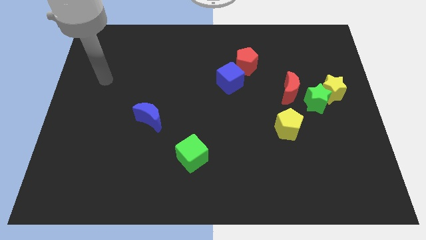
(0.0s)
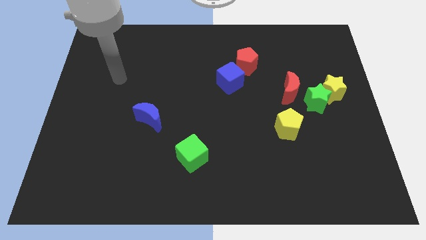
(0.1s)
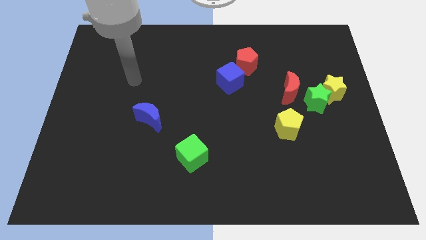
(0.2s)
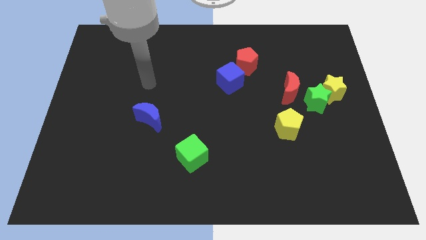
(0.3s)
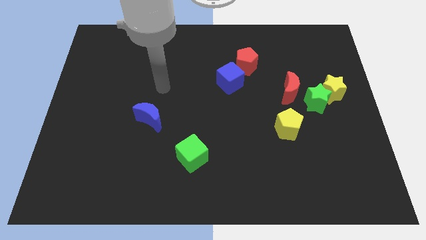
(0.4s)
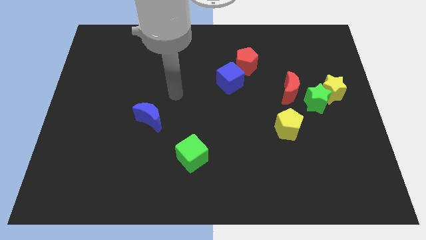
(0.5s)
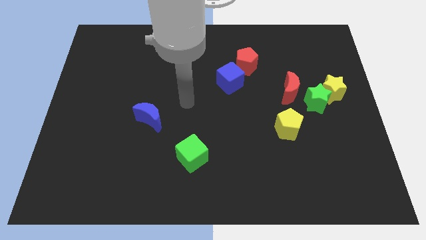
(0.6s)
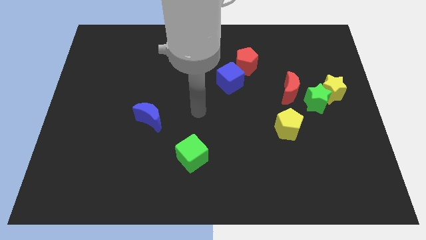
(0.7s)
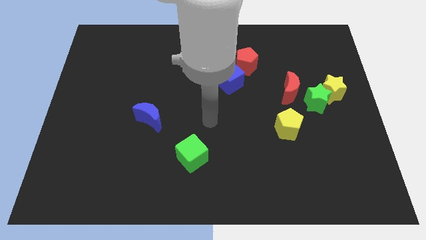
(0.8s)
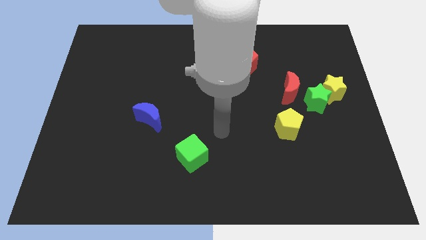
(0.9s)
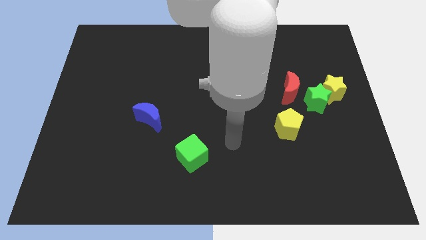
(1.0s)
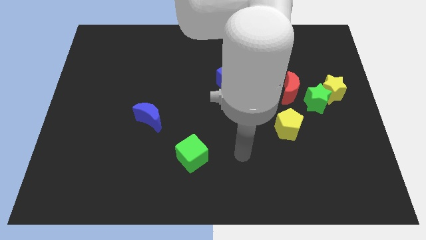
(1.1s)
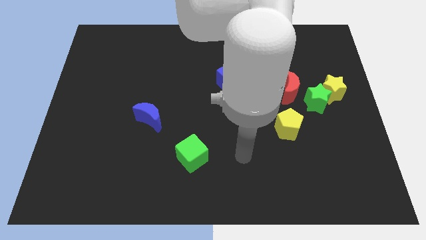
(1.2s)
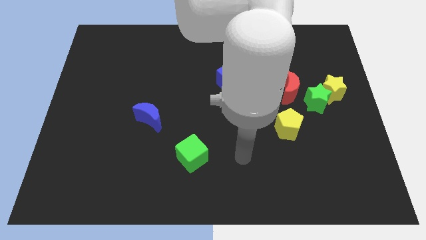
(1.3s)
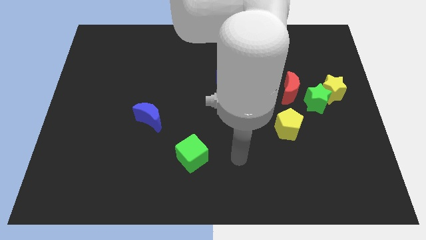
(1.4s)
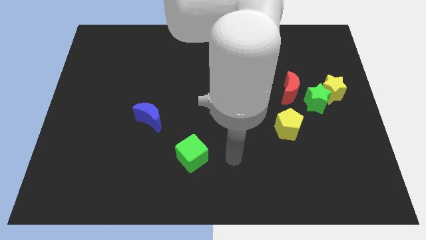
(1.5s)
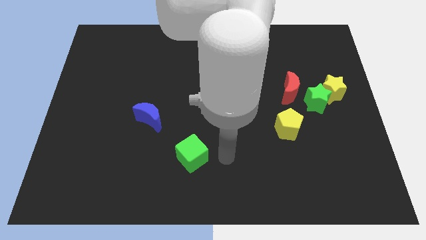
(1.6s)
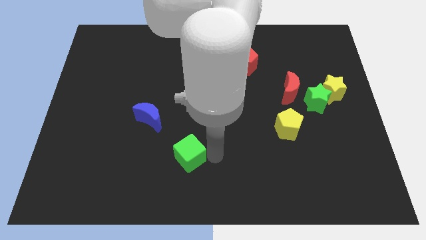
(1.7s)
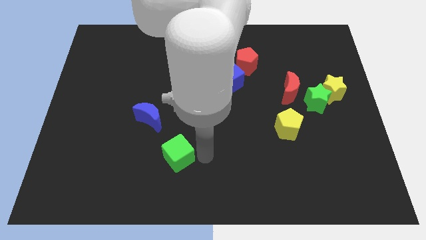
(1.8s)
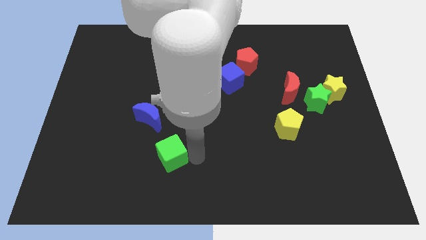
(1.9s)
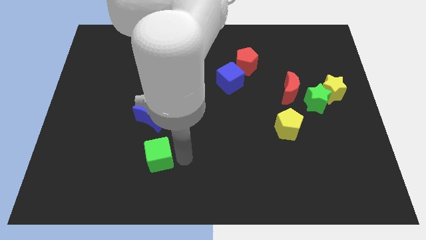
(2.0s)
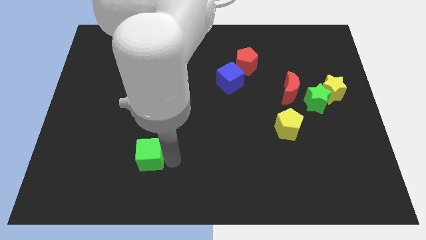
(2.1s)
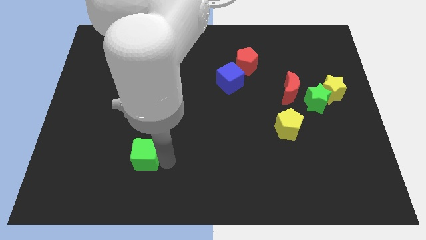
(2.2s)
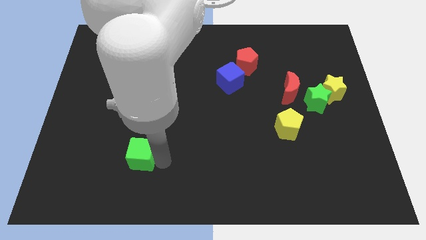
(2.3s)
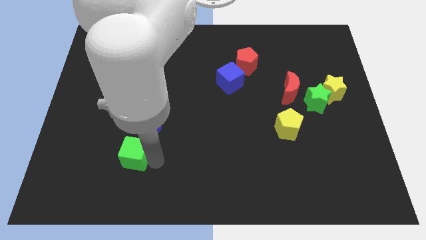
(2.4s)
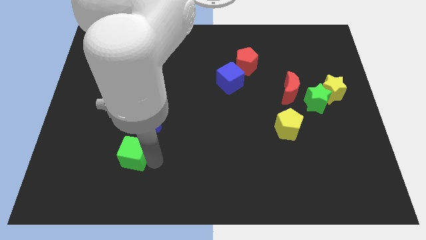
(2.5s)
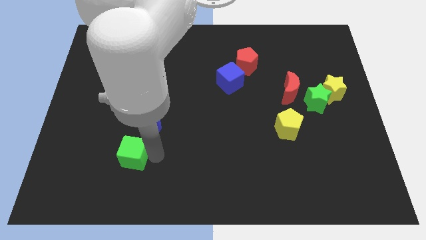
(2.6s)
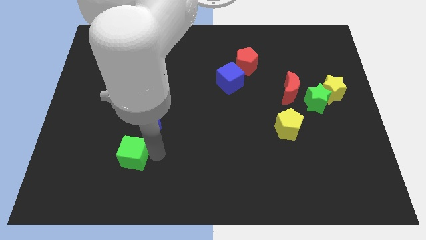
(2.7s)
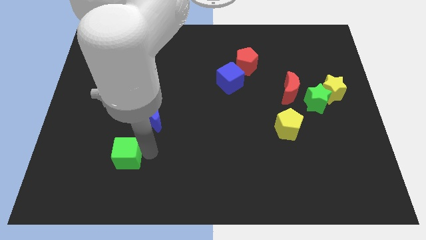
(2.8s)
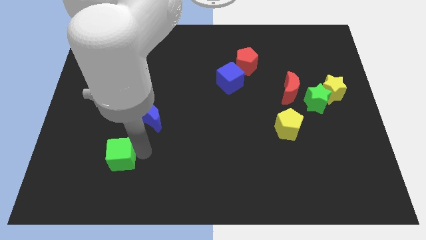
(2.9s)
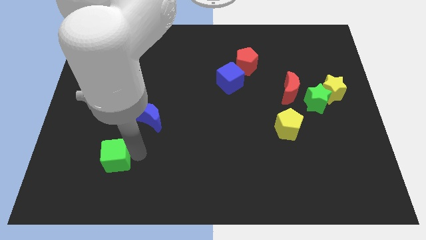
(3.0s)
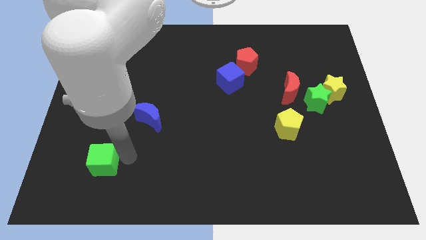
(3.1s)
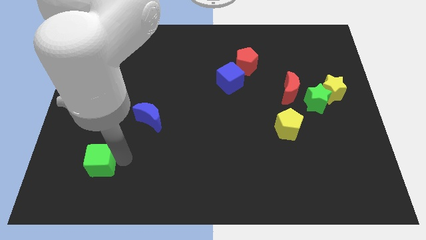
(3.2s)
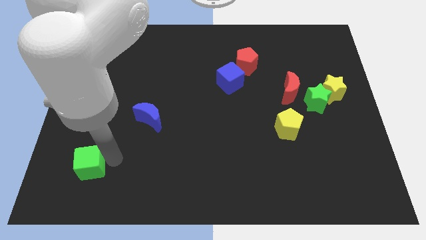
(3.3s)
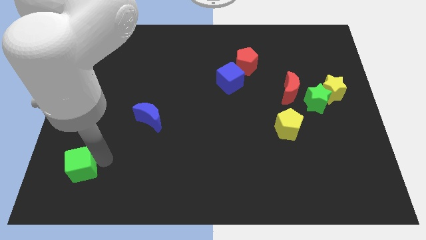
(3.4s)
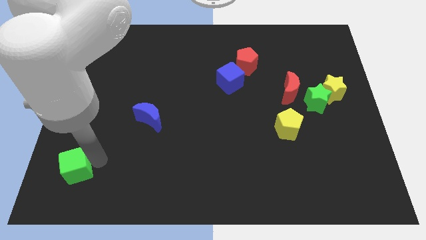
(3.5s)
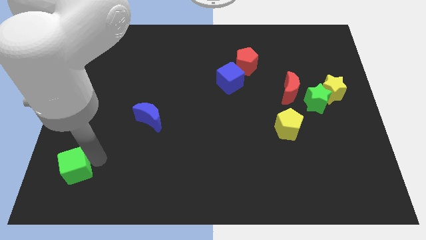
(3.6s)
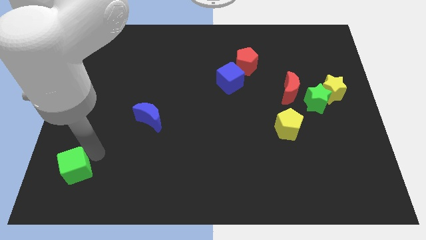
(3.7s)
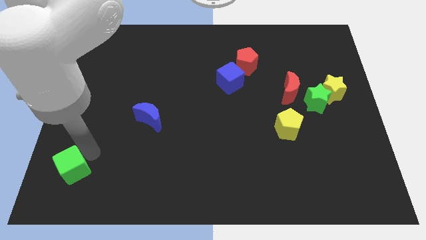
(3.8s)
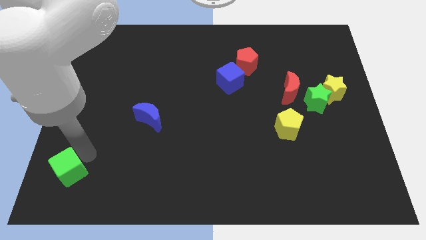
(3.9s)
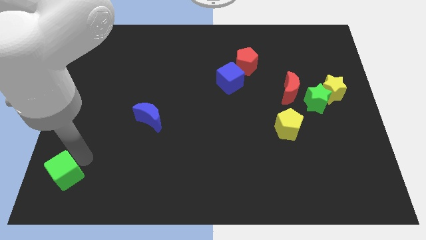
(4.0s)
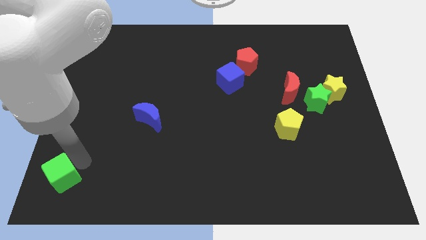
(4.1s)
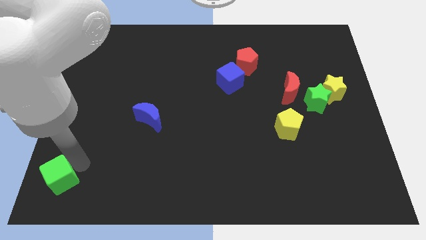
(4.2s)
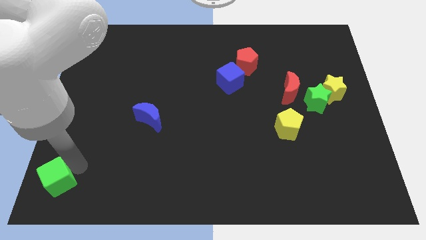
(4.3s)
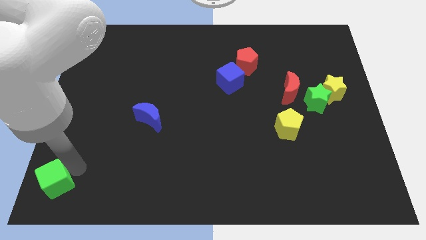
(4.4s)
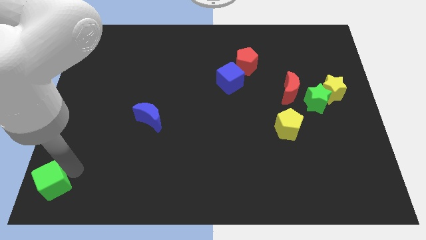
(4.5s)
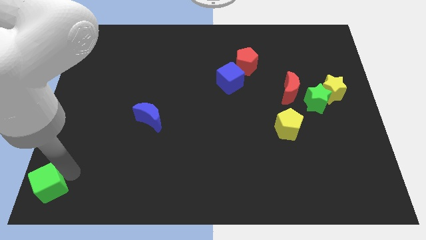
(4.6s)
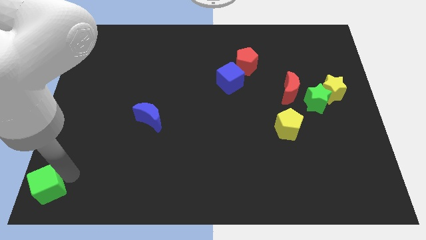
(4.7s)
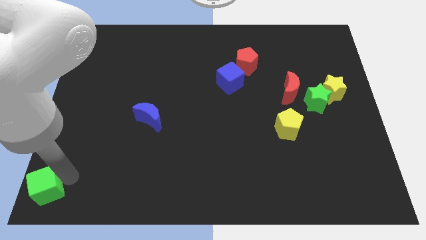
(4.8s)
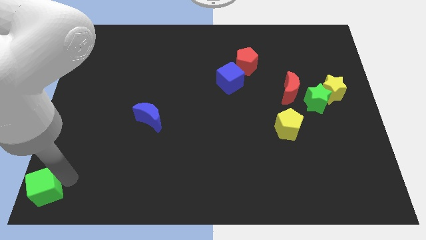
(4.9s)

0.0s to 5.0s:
move the green cube to the bottom left of the board

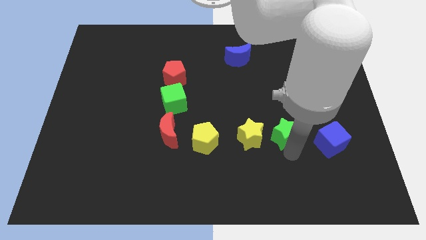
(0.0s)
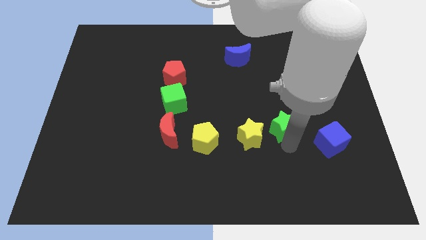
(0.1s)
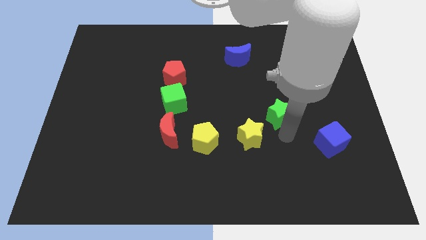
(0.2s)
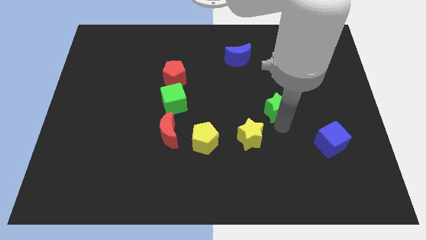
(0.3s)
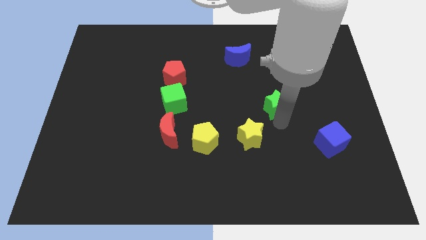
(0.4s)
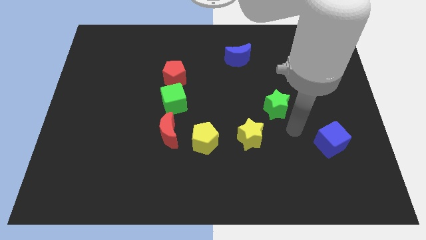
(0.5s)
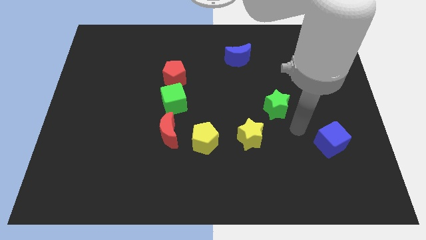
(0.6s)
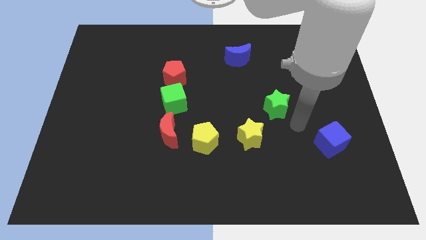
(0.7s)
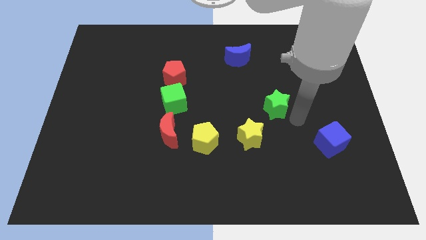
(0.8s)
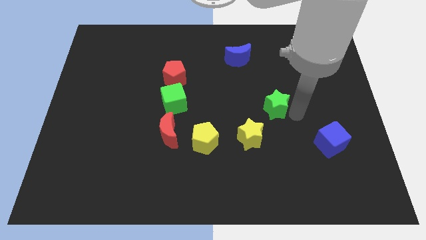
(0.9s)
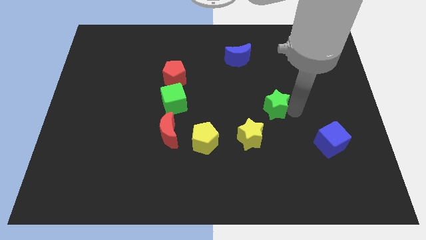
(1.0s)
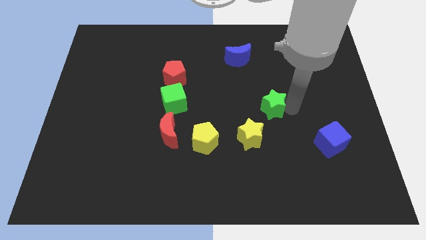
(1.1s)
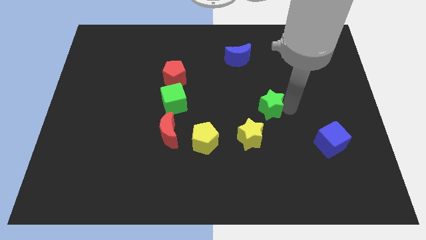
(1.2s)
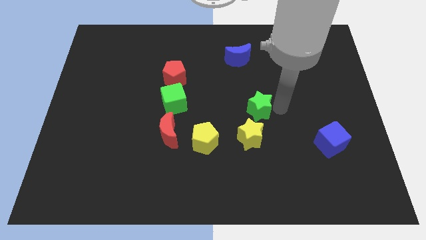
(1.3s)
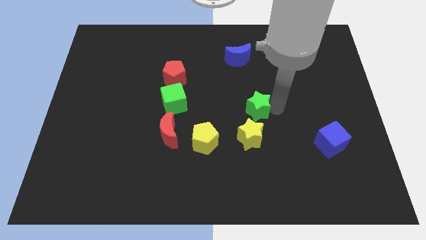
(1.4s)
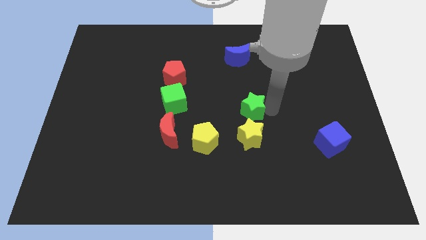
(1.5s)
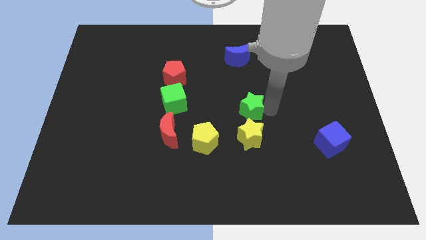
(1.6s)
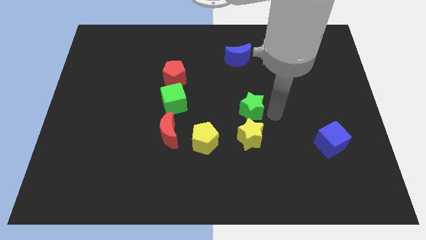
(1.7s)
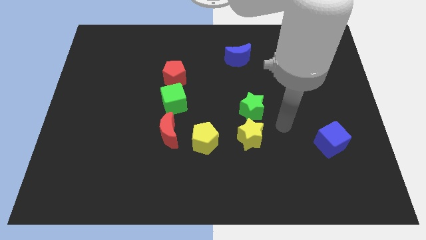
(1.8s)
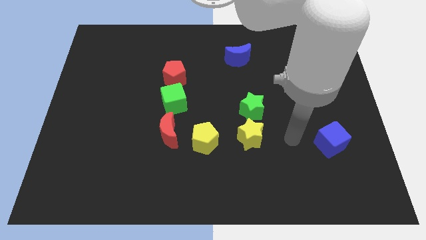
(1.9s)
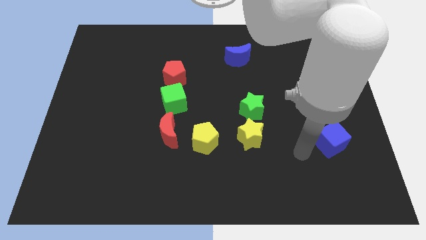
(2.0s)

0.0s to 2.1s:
place green star above yellow star

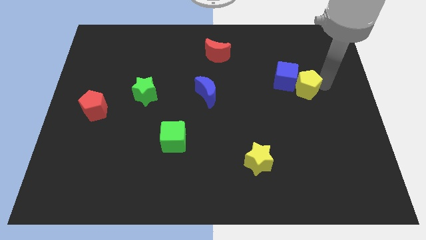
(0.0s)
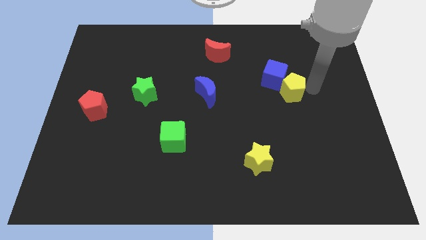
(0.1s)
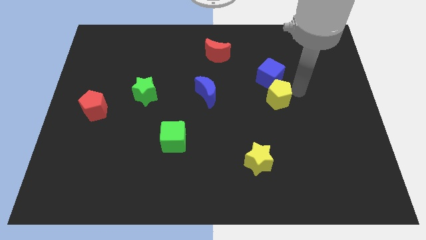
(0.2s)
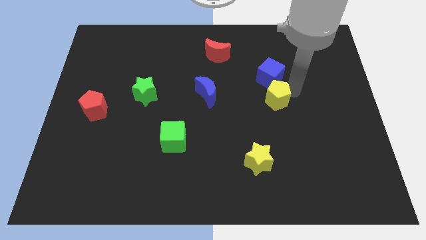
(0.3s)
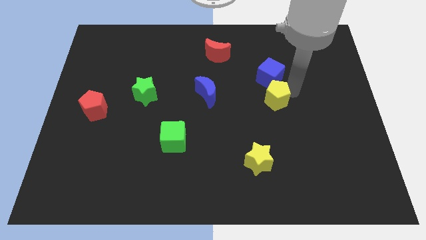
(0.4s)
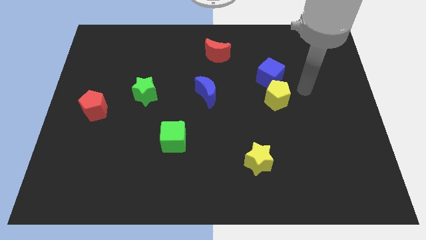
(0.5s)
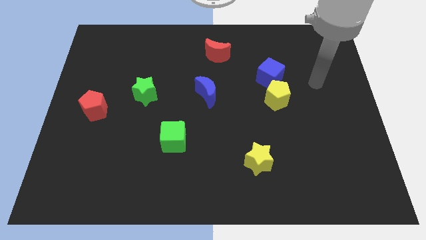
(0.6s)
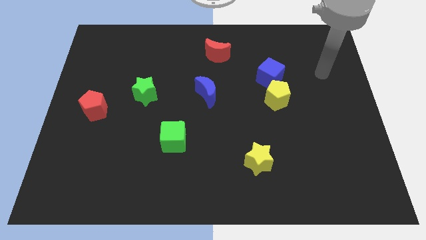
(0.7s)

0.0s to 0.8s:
move the yellow pentagon below the blue cube

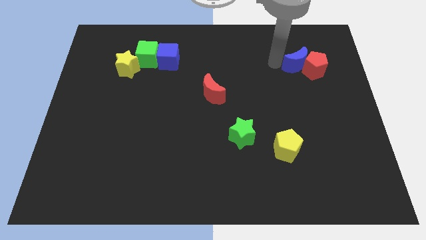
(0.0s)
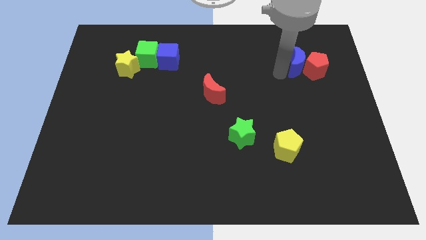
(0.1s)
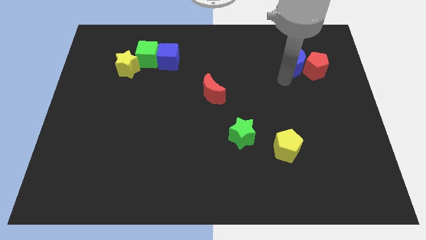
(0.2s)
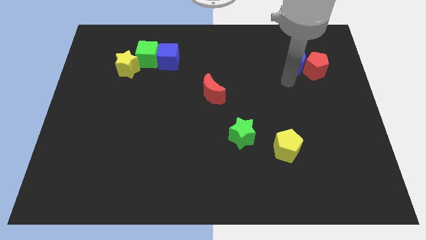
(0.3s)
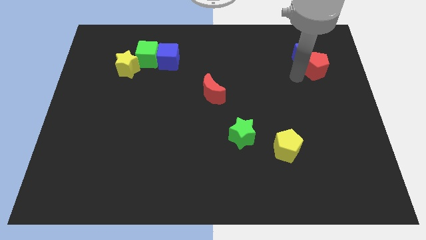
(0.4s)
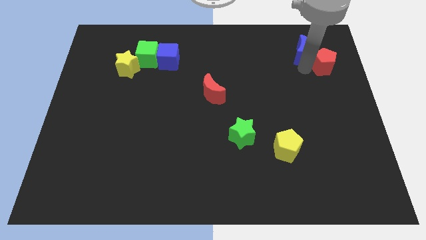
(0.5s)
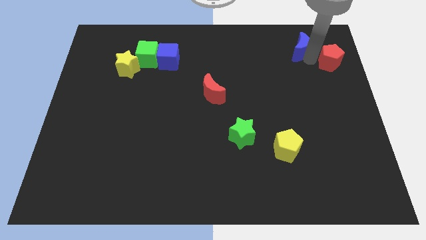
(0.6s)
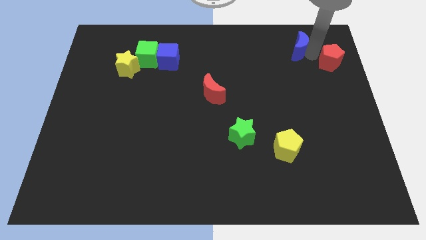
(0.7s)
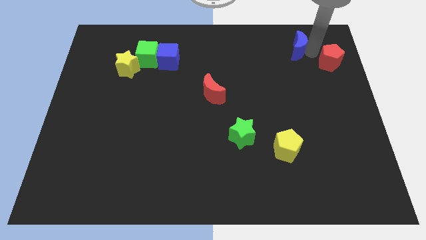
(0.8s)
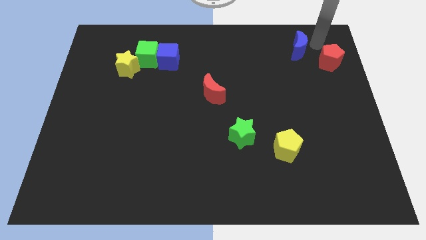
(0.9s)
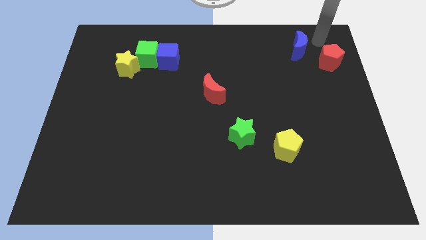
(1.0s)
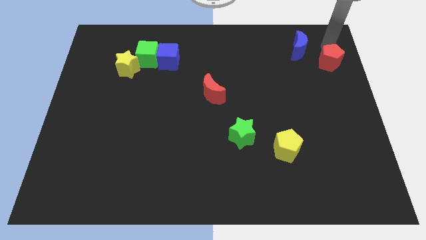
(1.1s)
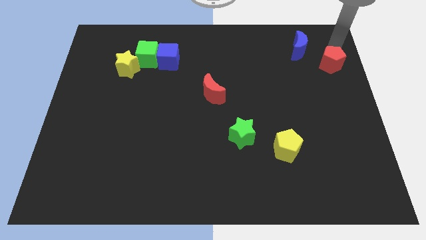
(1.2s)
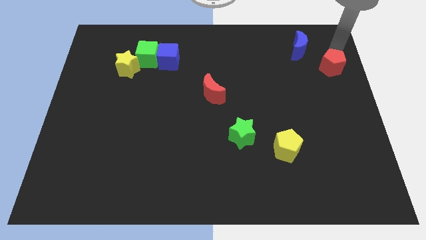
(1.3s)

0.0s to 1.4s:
move red pentagon slightly right
